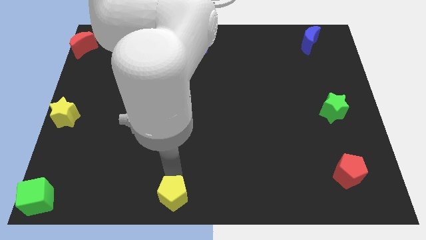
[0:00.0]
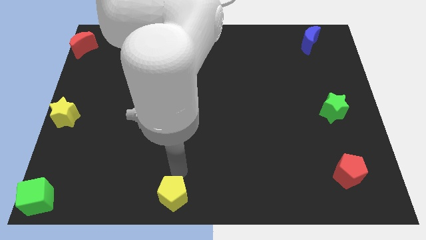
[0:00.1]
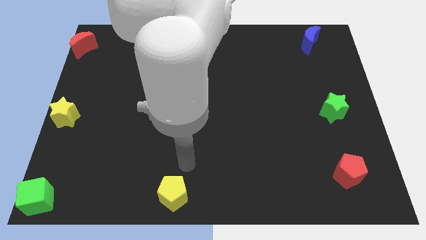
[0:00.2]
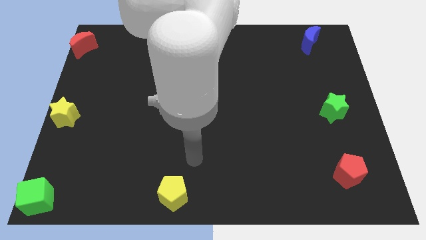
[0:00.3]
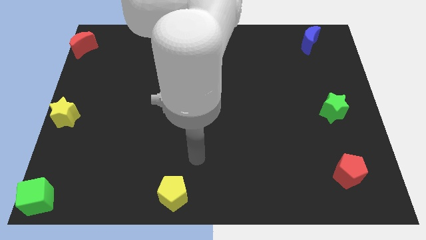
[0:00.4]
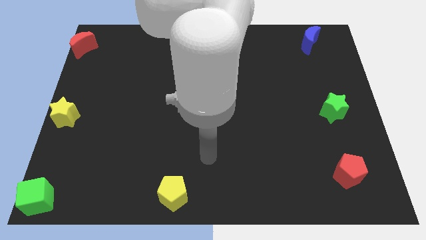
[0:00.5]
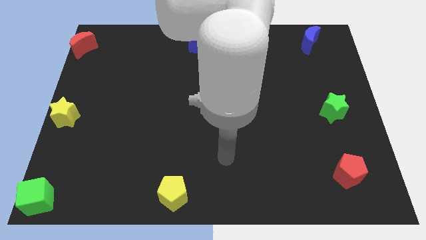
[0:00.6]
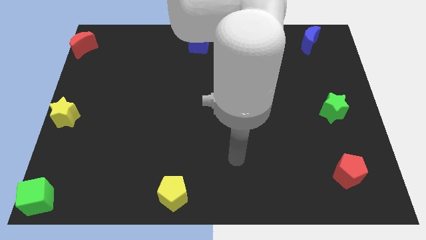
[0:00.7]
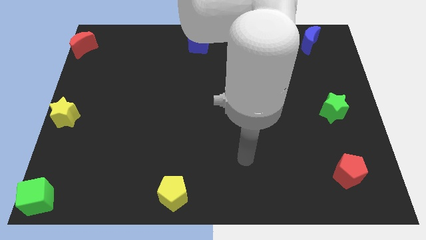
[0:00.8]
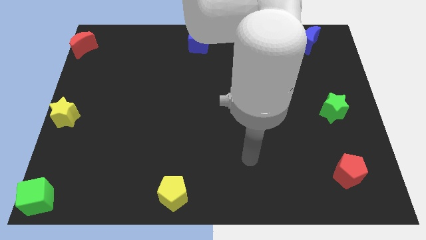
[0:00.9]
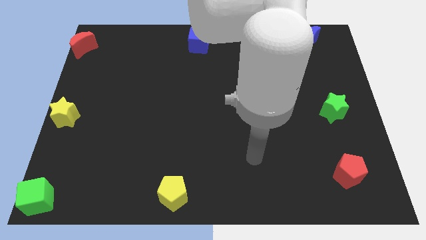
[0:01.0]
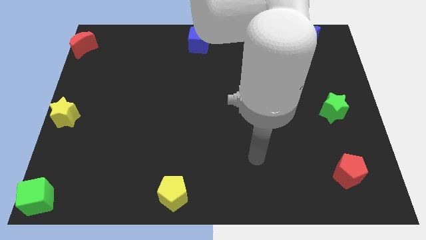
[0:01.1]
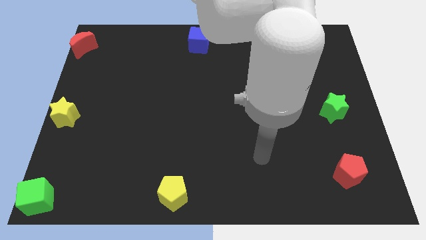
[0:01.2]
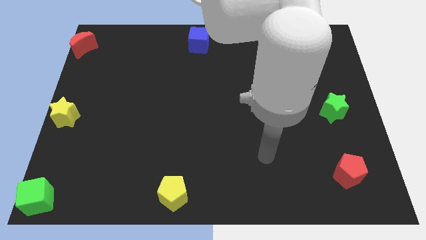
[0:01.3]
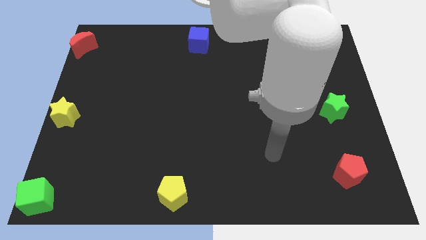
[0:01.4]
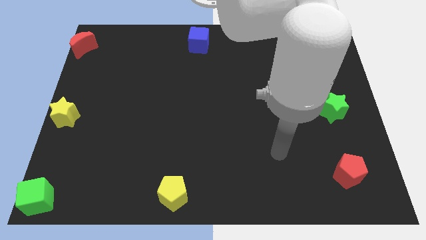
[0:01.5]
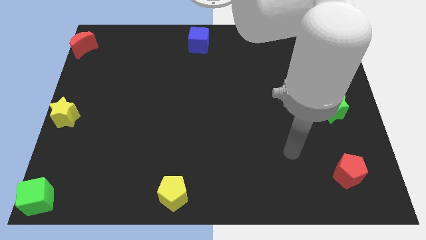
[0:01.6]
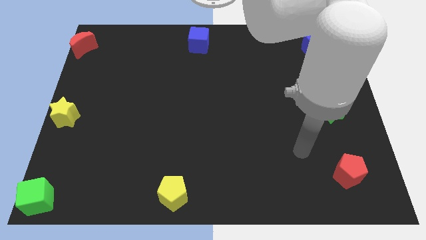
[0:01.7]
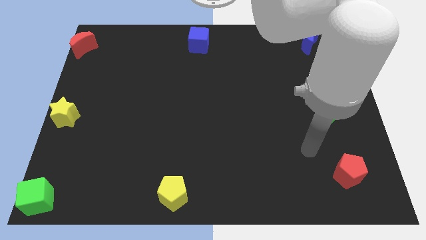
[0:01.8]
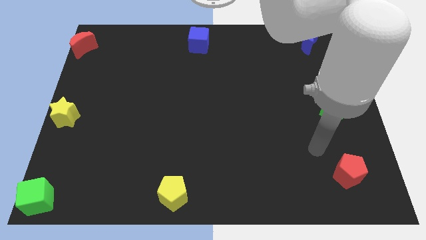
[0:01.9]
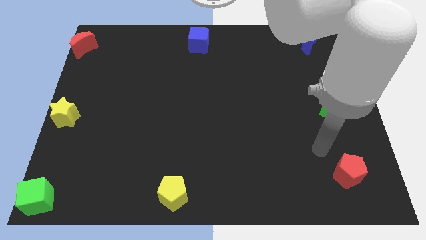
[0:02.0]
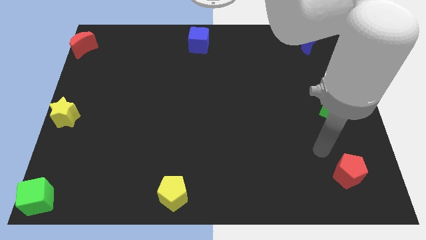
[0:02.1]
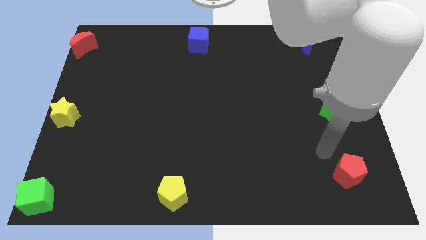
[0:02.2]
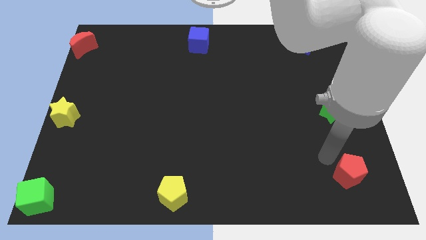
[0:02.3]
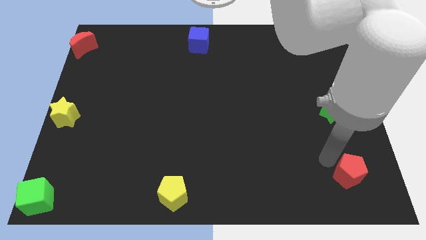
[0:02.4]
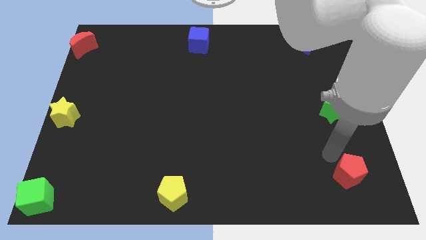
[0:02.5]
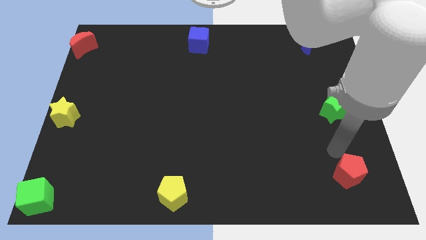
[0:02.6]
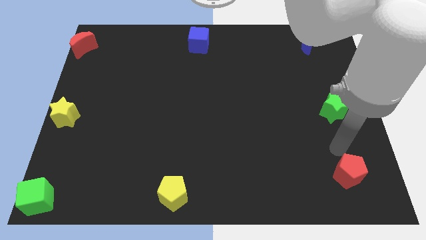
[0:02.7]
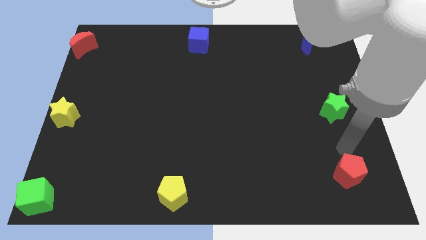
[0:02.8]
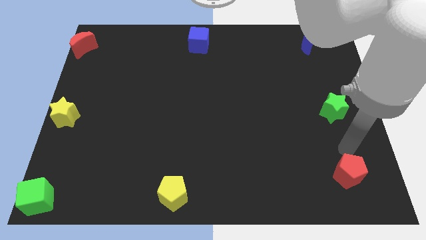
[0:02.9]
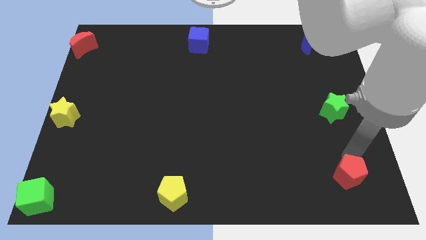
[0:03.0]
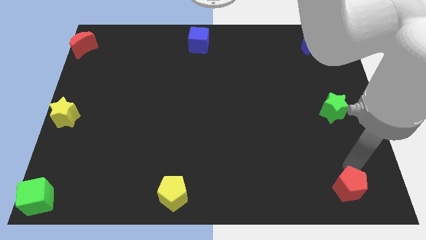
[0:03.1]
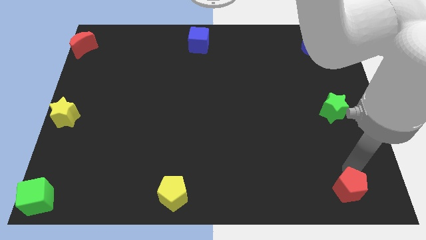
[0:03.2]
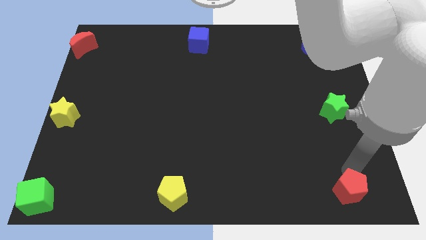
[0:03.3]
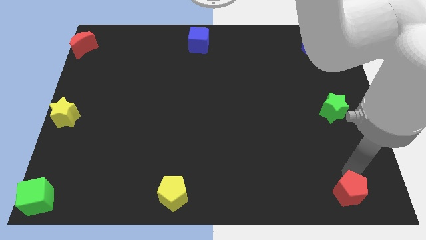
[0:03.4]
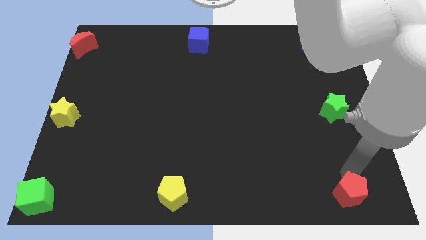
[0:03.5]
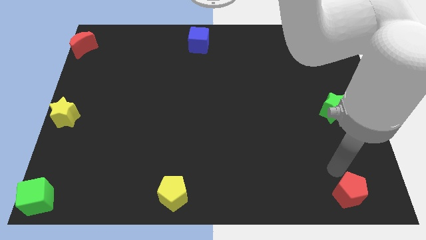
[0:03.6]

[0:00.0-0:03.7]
push the red pentagon slightly downwards

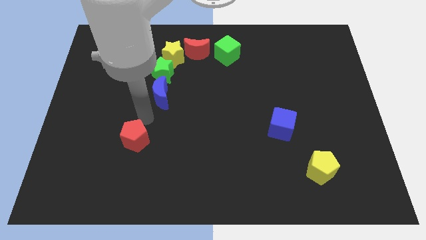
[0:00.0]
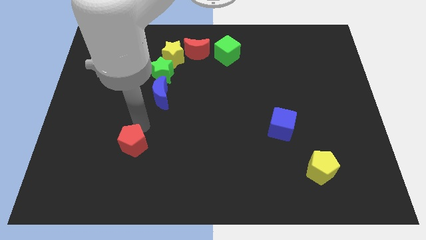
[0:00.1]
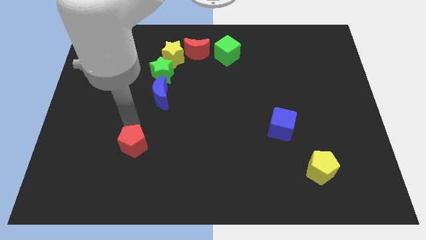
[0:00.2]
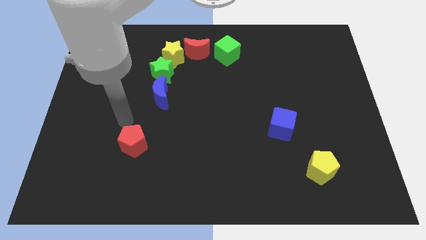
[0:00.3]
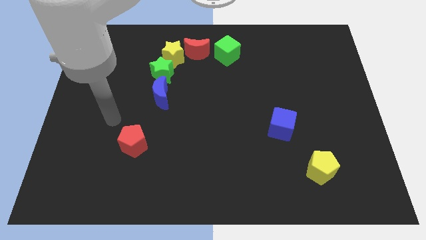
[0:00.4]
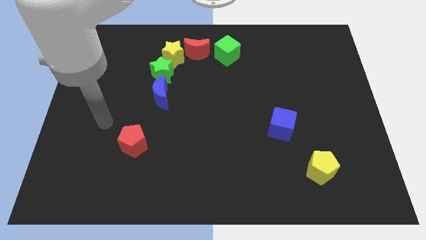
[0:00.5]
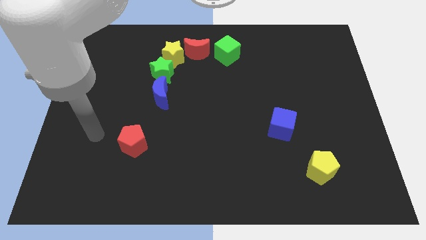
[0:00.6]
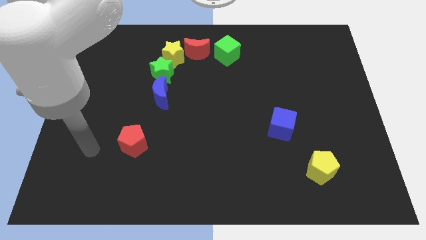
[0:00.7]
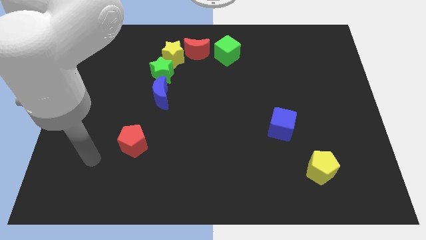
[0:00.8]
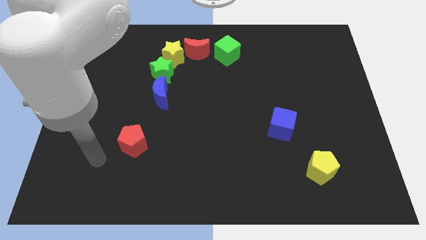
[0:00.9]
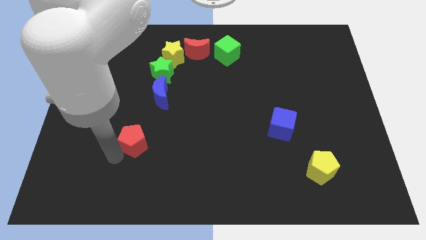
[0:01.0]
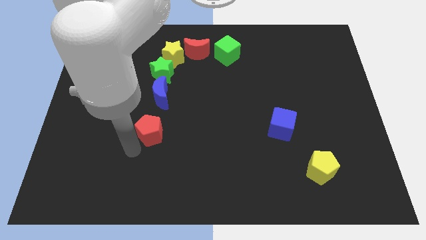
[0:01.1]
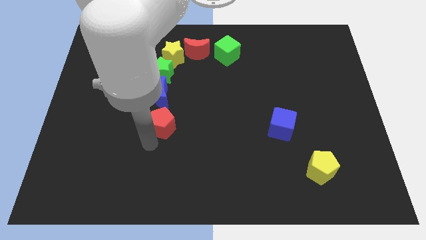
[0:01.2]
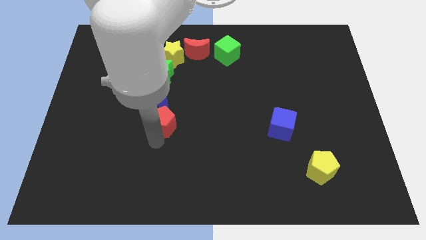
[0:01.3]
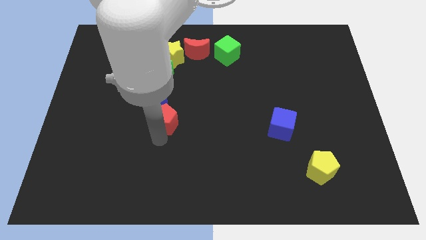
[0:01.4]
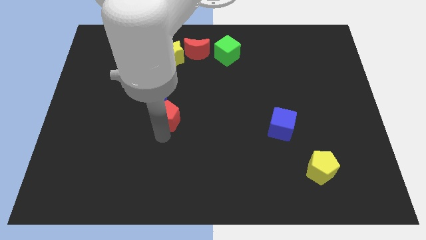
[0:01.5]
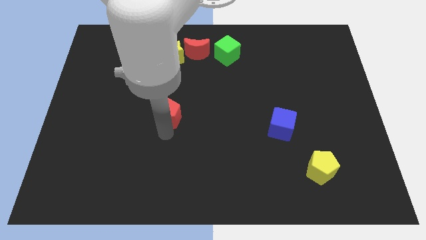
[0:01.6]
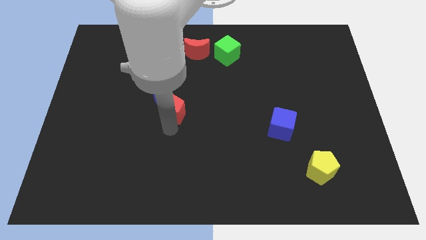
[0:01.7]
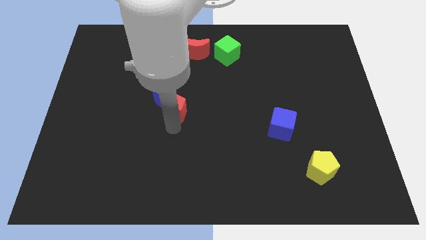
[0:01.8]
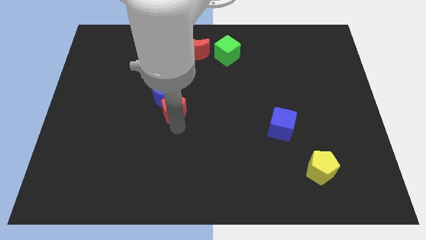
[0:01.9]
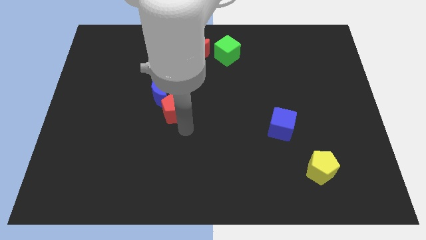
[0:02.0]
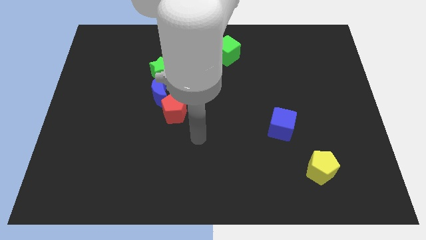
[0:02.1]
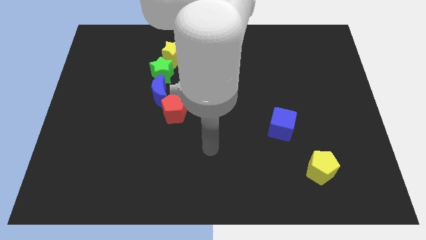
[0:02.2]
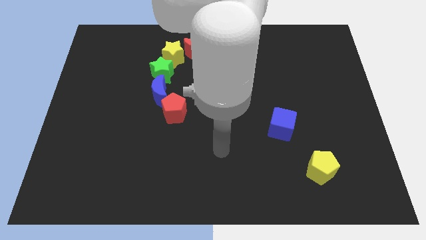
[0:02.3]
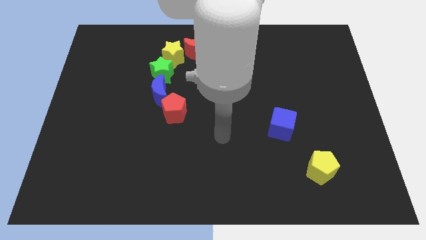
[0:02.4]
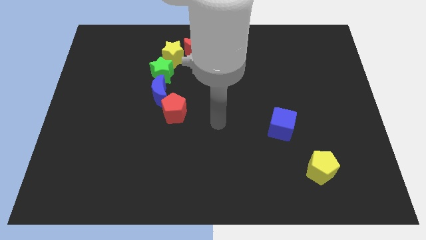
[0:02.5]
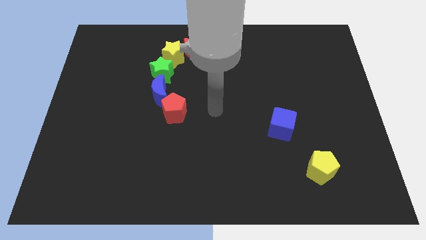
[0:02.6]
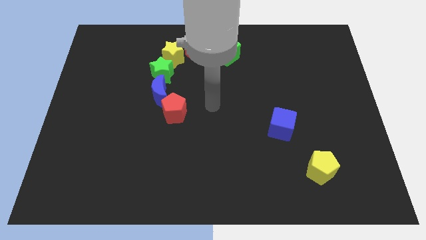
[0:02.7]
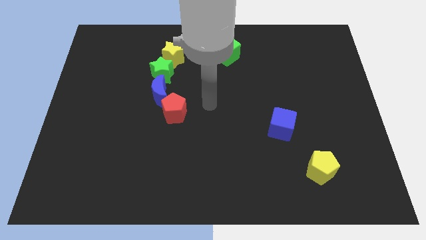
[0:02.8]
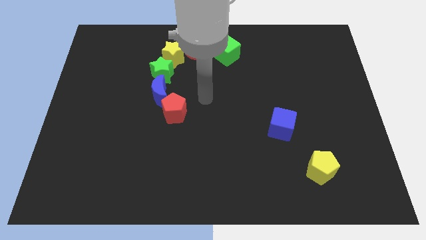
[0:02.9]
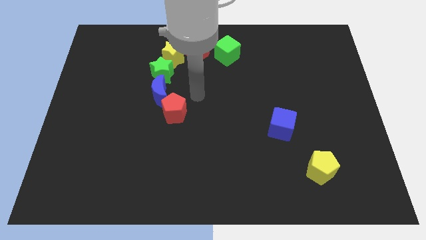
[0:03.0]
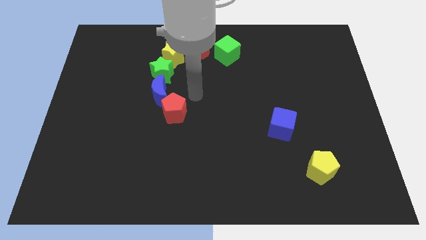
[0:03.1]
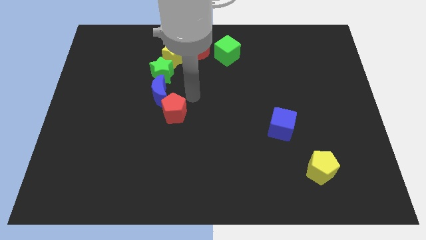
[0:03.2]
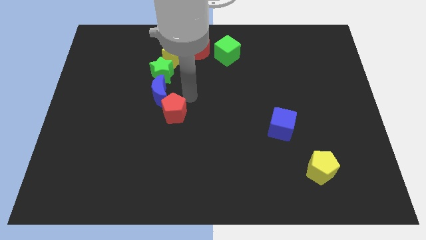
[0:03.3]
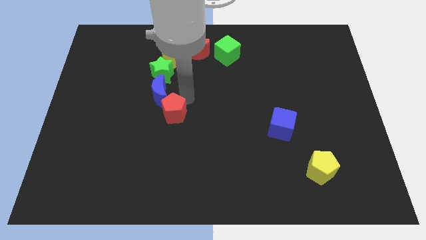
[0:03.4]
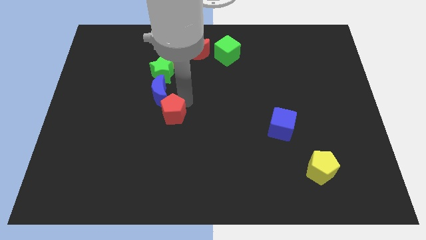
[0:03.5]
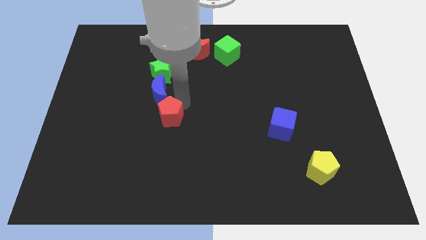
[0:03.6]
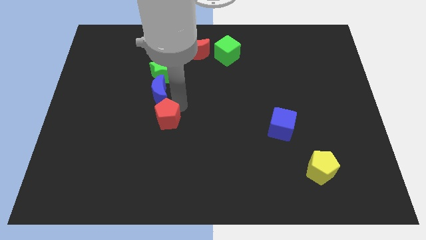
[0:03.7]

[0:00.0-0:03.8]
move the red pentagon below the blue crescent

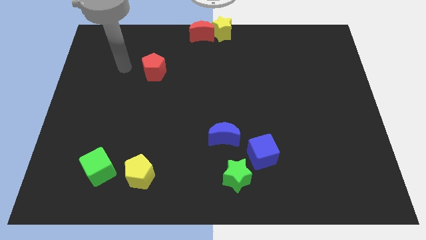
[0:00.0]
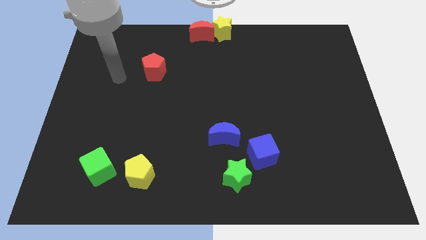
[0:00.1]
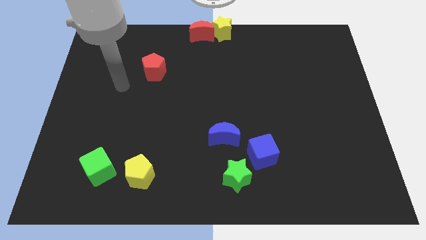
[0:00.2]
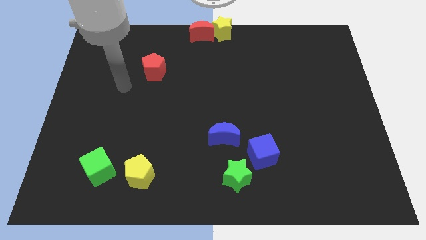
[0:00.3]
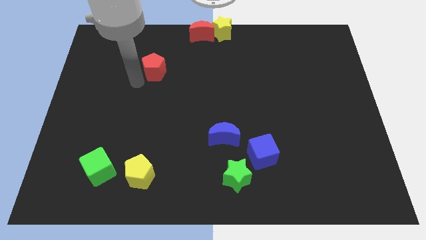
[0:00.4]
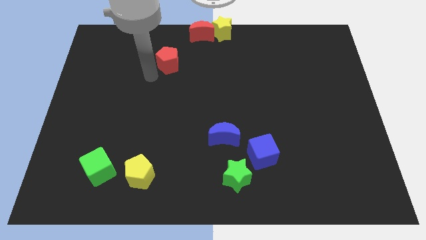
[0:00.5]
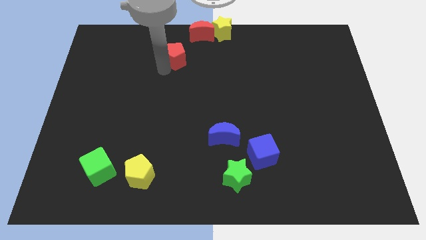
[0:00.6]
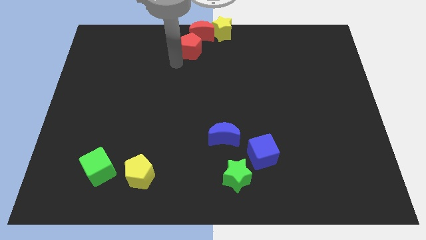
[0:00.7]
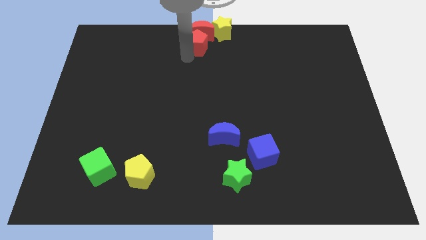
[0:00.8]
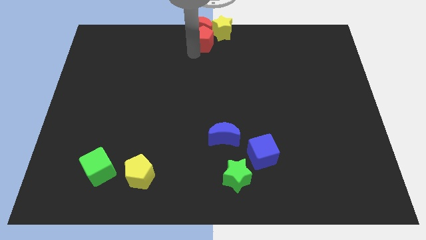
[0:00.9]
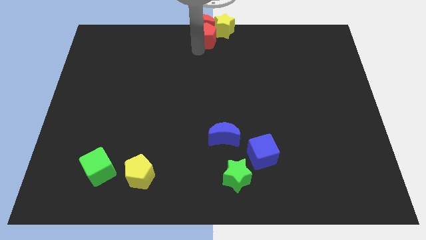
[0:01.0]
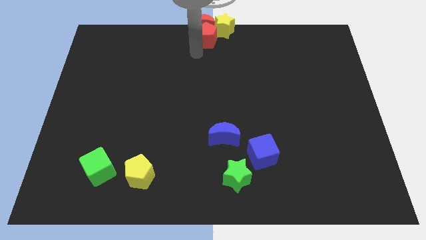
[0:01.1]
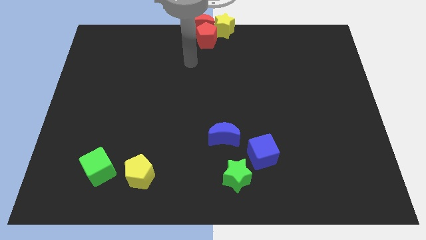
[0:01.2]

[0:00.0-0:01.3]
push the red pentagon into the red moon
